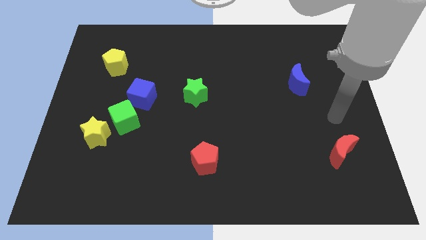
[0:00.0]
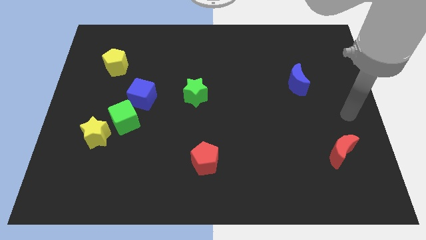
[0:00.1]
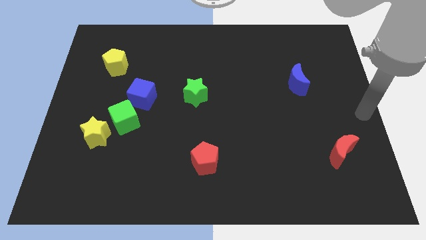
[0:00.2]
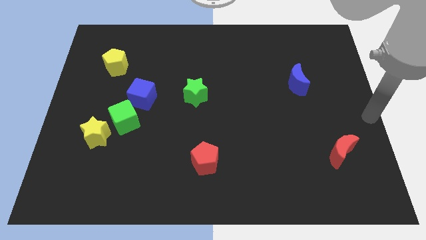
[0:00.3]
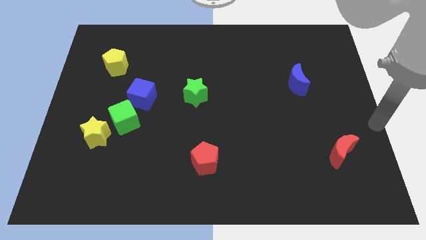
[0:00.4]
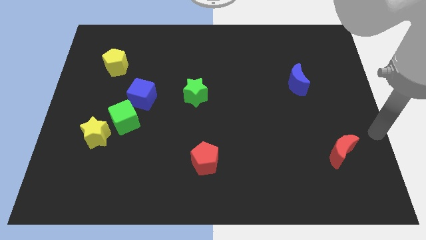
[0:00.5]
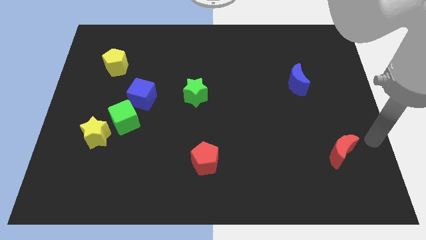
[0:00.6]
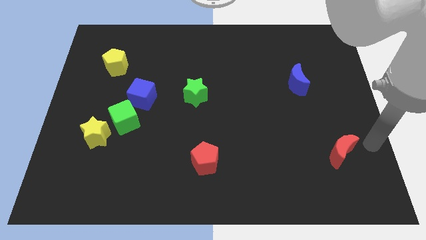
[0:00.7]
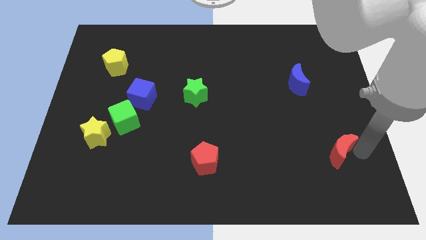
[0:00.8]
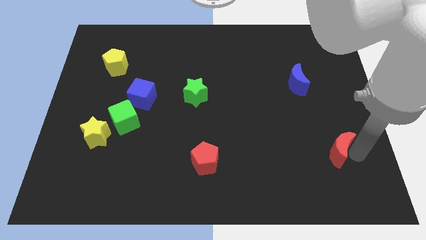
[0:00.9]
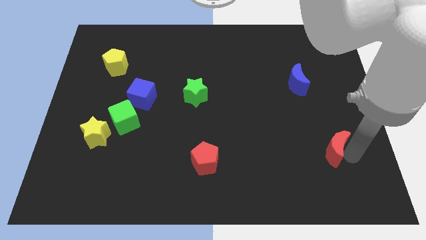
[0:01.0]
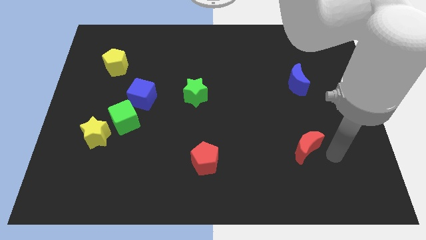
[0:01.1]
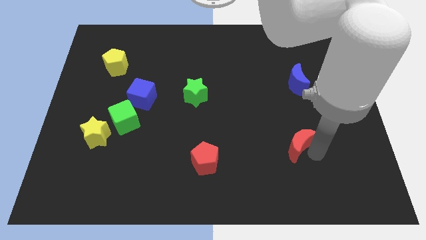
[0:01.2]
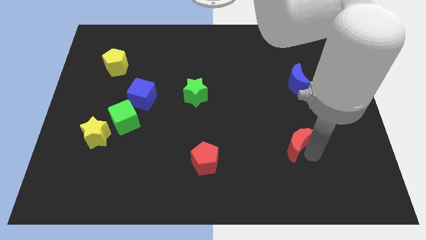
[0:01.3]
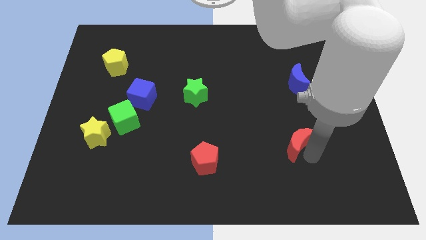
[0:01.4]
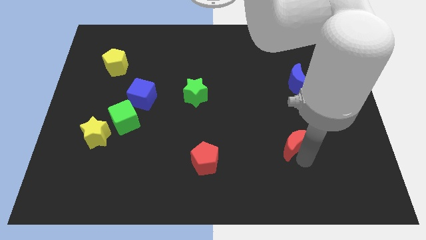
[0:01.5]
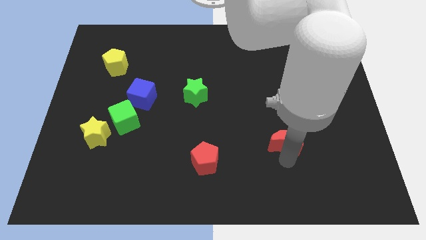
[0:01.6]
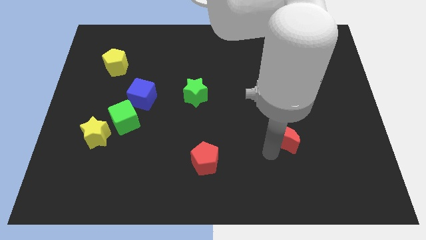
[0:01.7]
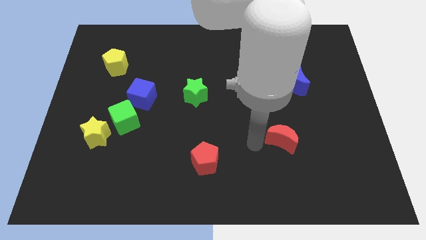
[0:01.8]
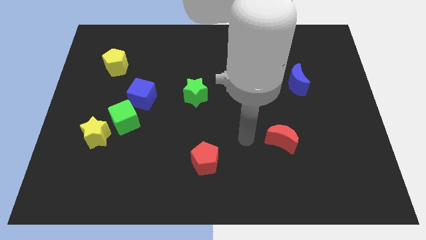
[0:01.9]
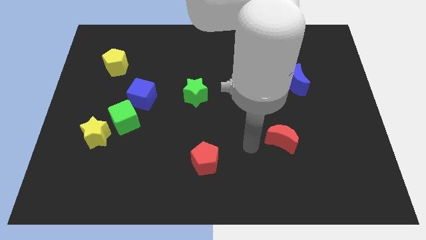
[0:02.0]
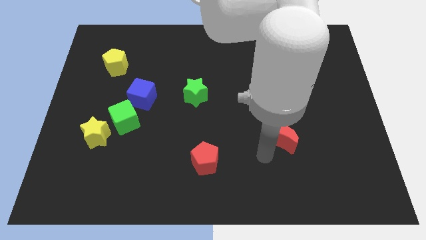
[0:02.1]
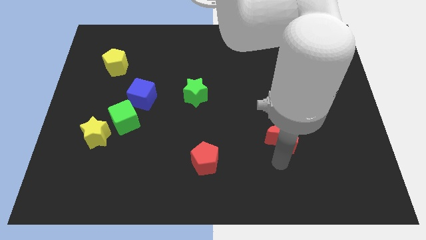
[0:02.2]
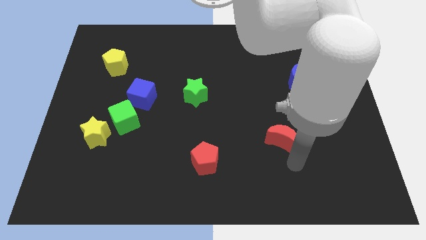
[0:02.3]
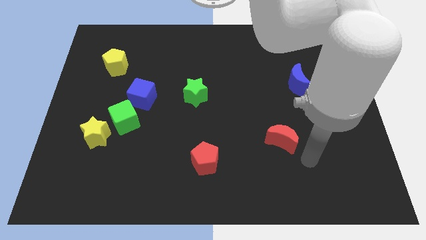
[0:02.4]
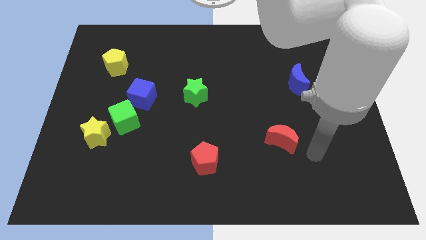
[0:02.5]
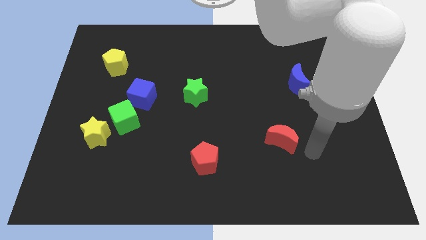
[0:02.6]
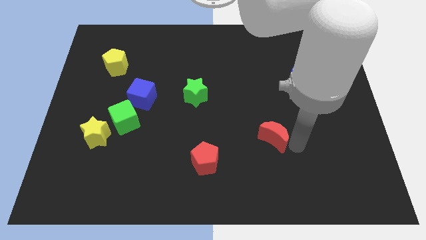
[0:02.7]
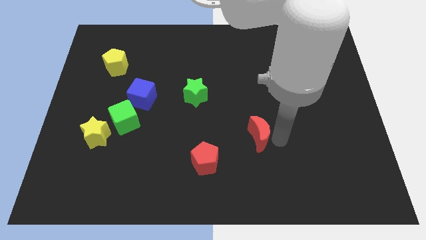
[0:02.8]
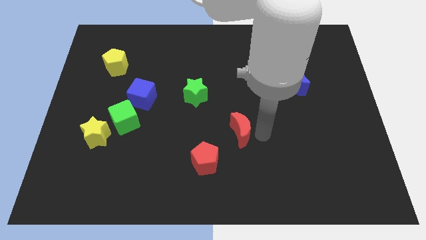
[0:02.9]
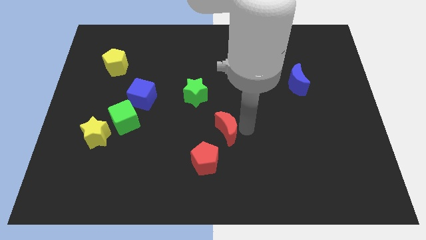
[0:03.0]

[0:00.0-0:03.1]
move the red crescent to the top right side of the red pentagon

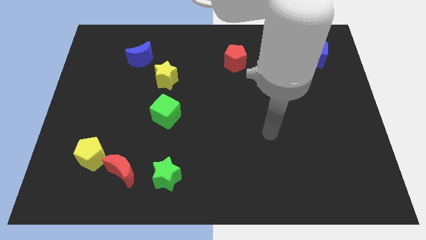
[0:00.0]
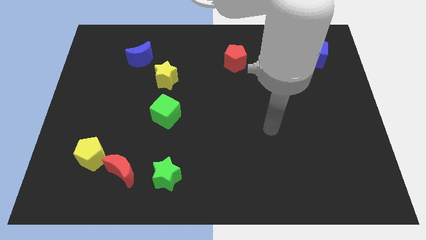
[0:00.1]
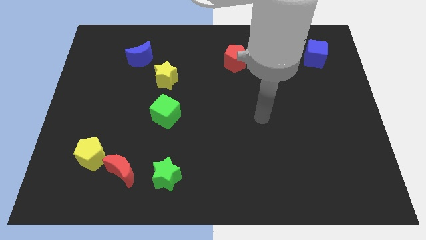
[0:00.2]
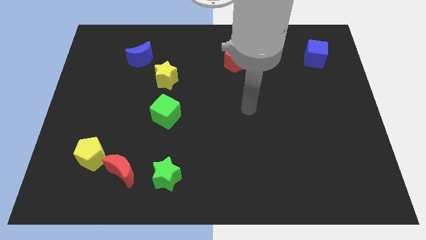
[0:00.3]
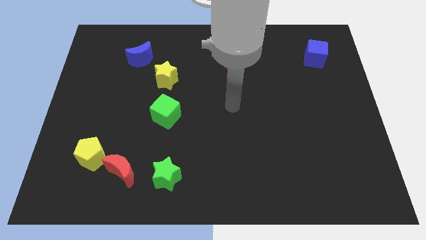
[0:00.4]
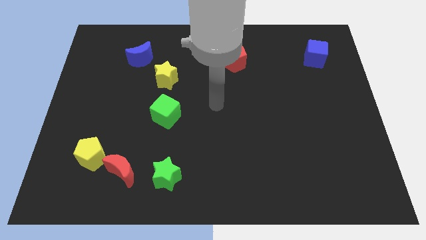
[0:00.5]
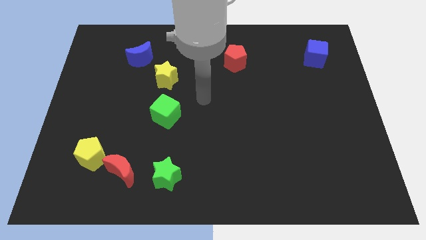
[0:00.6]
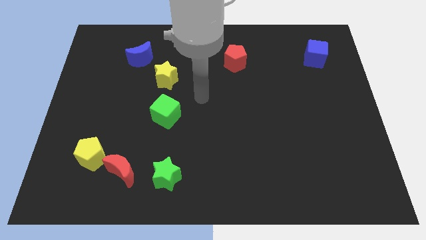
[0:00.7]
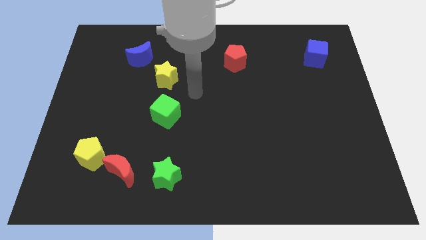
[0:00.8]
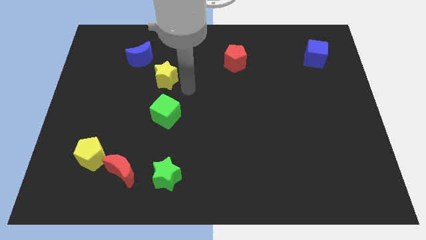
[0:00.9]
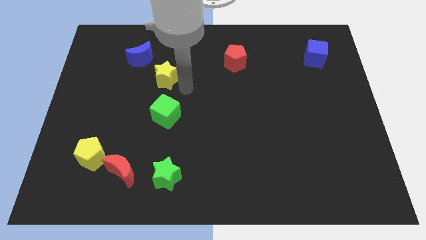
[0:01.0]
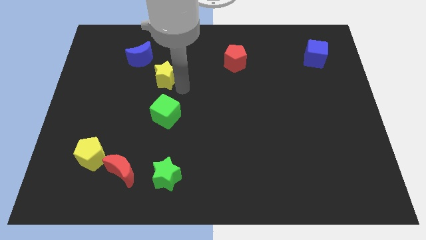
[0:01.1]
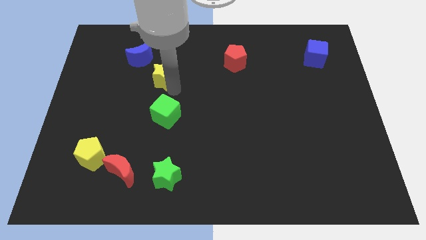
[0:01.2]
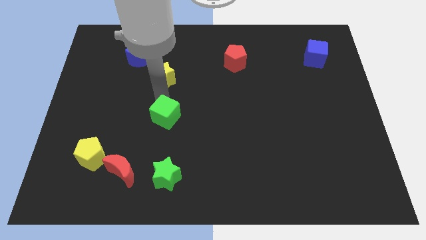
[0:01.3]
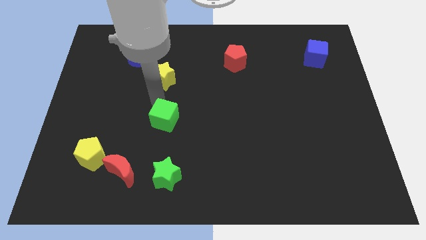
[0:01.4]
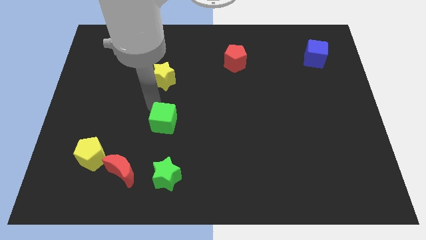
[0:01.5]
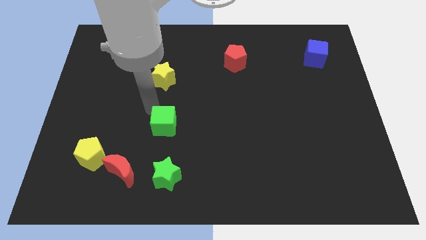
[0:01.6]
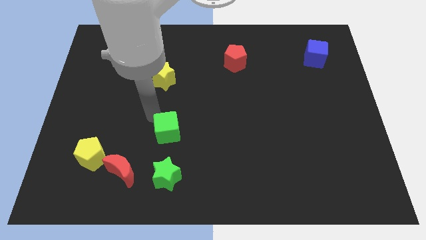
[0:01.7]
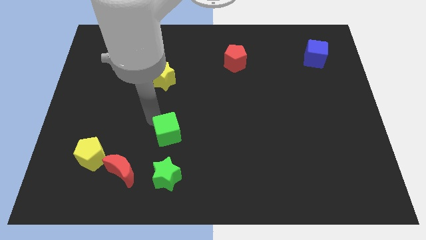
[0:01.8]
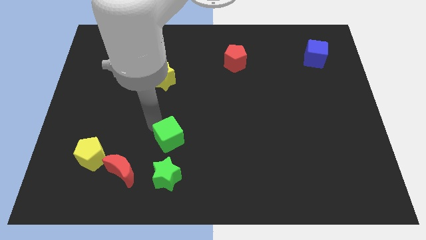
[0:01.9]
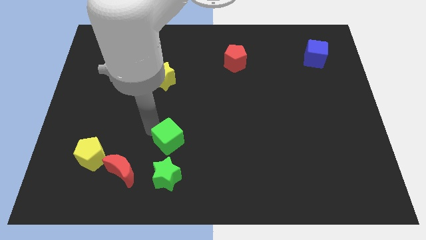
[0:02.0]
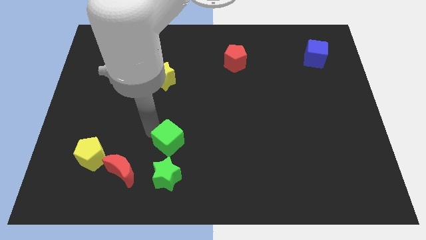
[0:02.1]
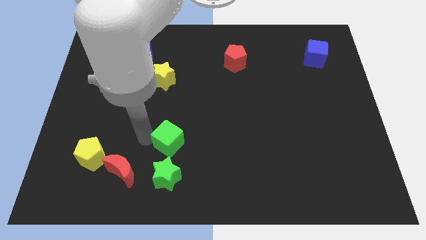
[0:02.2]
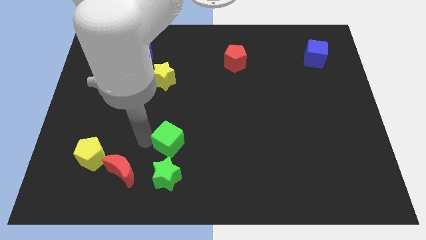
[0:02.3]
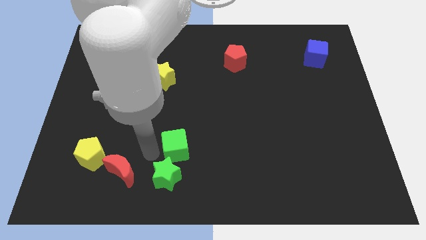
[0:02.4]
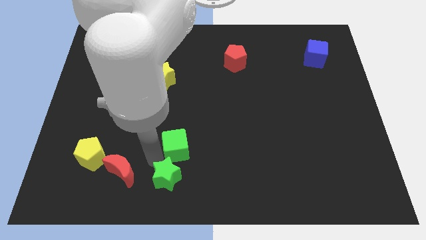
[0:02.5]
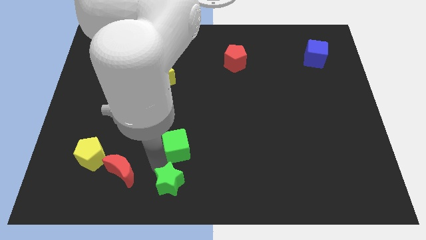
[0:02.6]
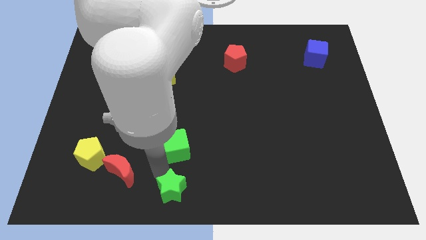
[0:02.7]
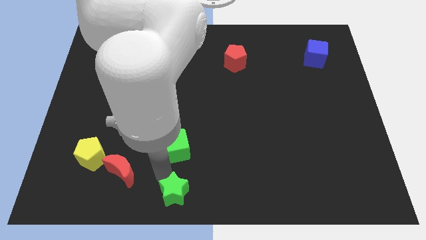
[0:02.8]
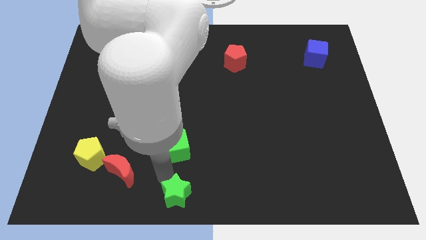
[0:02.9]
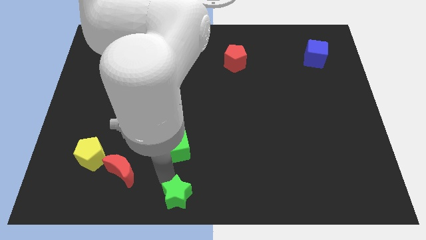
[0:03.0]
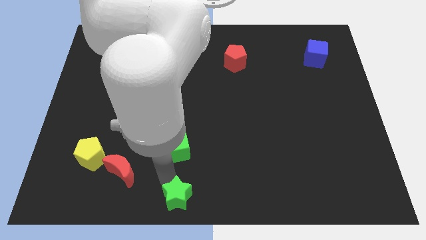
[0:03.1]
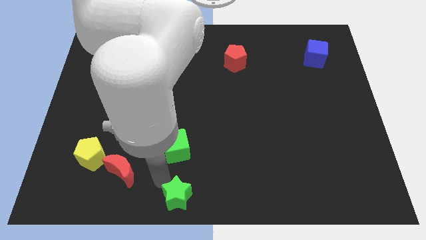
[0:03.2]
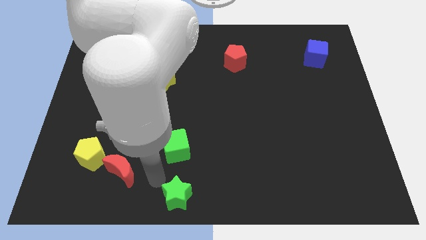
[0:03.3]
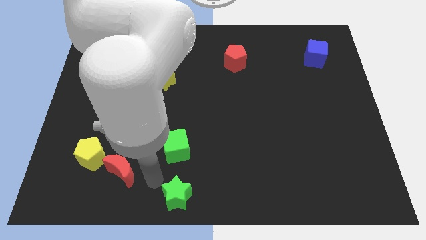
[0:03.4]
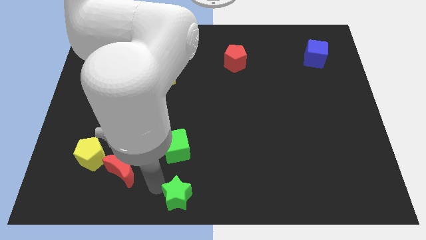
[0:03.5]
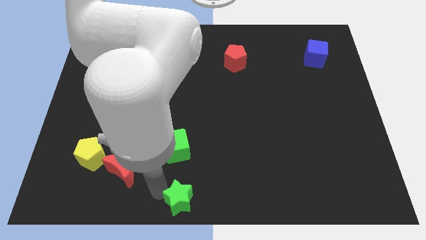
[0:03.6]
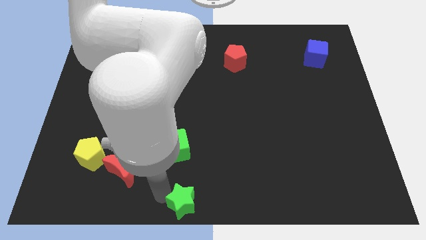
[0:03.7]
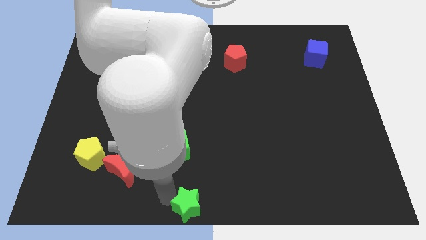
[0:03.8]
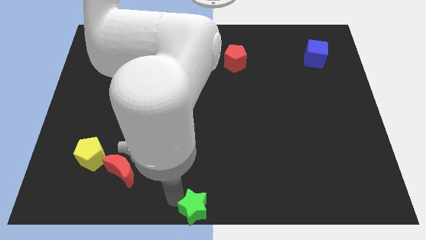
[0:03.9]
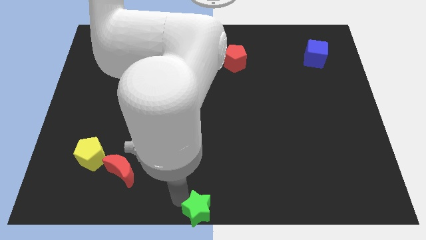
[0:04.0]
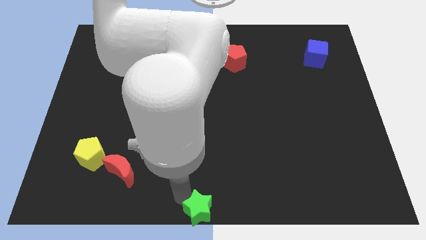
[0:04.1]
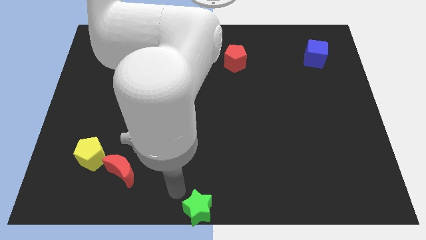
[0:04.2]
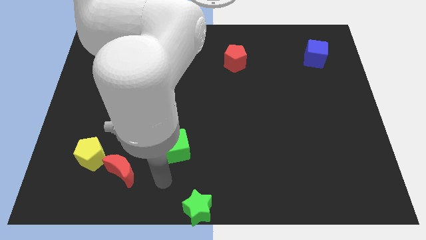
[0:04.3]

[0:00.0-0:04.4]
push the green star to the bottom center of the board

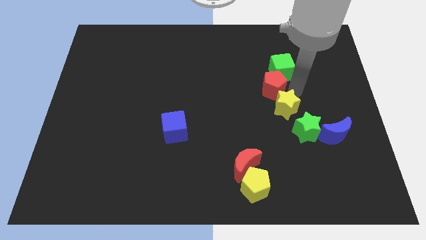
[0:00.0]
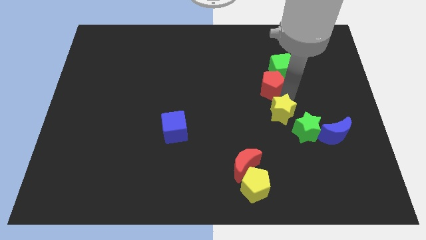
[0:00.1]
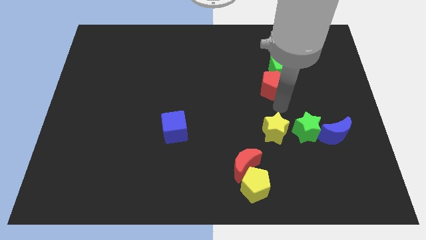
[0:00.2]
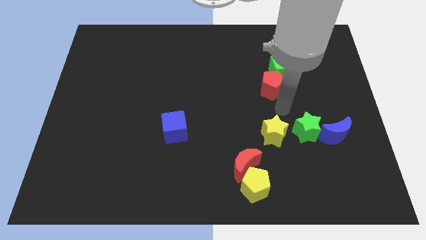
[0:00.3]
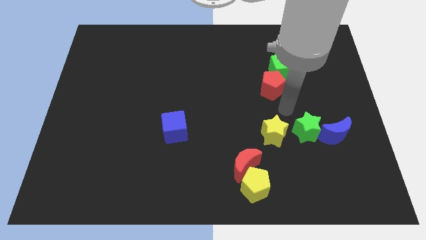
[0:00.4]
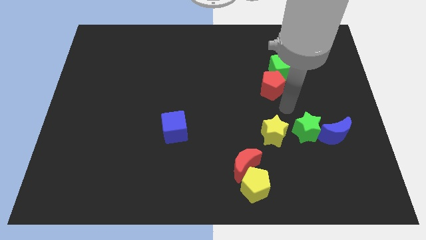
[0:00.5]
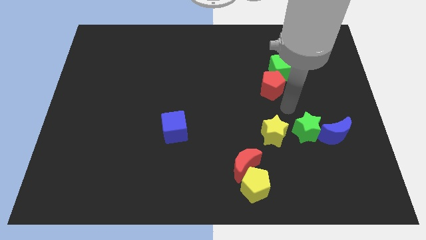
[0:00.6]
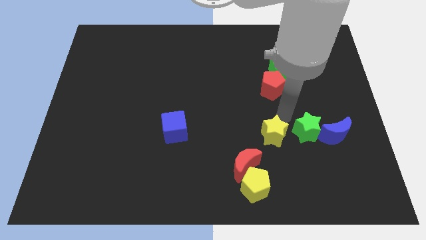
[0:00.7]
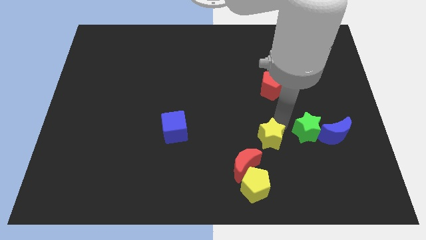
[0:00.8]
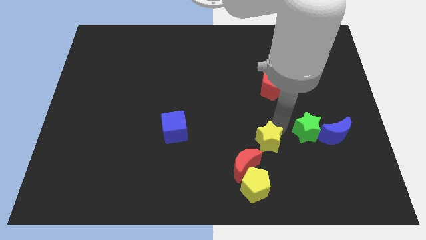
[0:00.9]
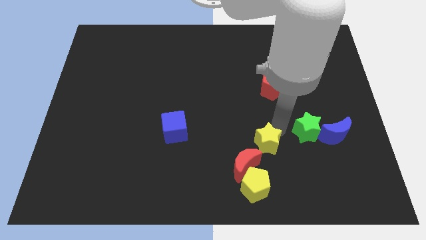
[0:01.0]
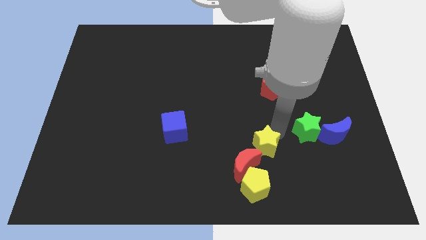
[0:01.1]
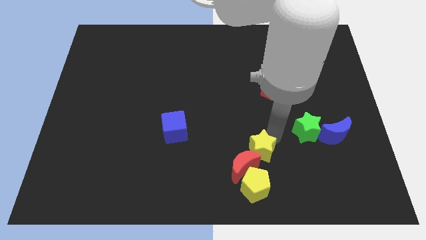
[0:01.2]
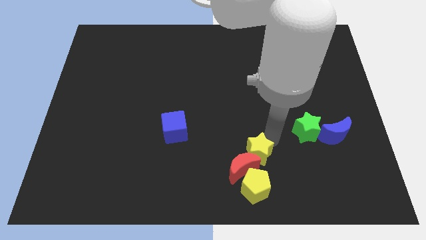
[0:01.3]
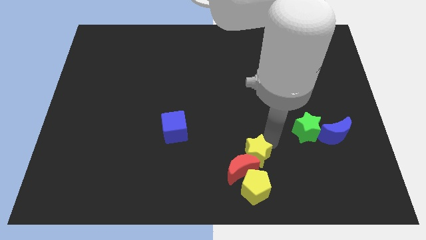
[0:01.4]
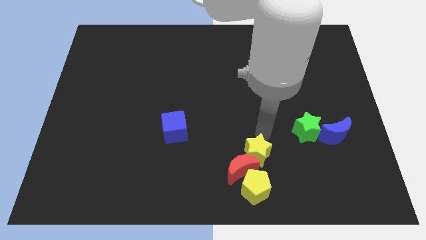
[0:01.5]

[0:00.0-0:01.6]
push the yellow star into the red moon
